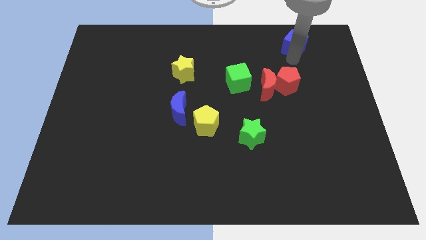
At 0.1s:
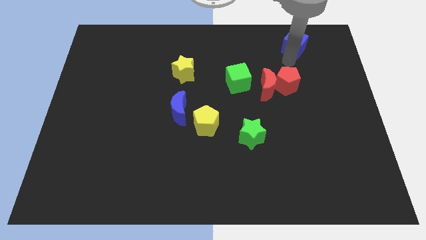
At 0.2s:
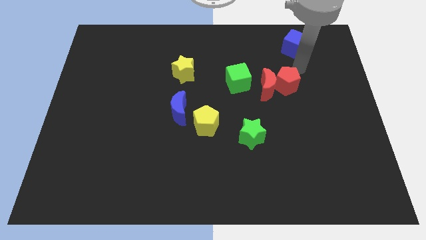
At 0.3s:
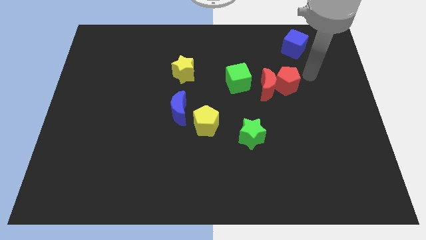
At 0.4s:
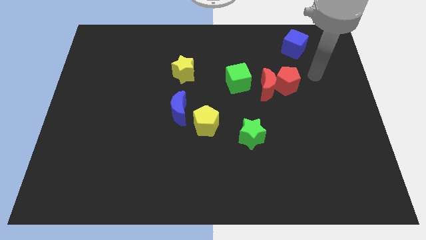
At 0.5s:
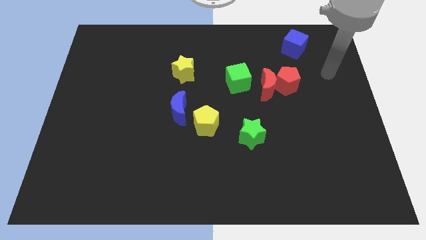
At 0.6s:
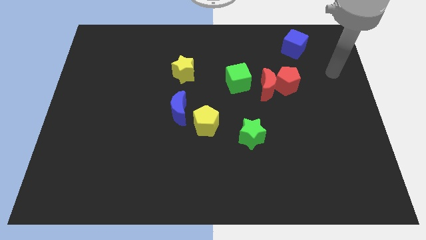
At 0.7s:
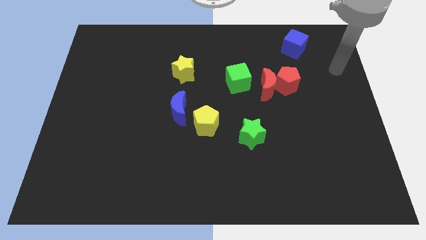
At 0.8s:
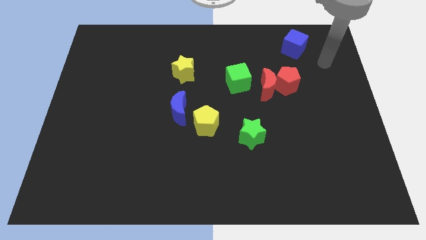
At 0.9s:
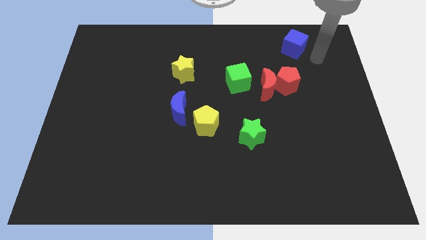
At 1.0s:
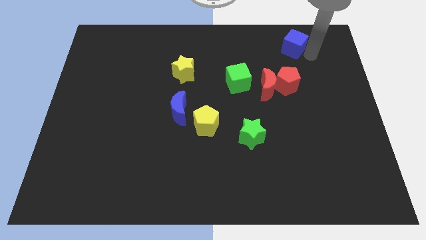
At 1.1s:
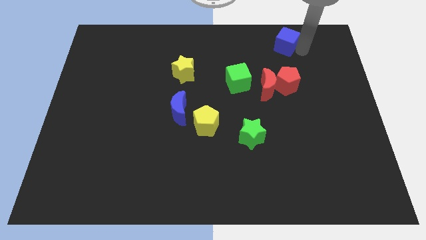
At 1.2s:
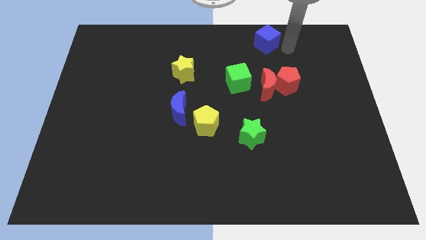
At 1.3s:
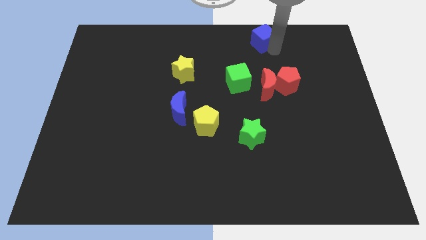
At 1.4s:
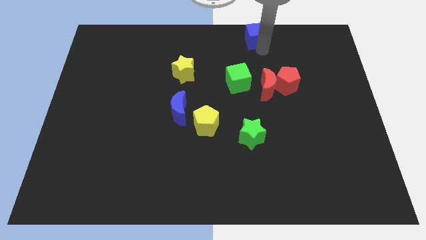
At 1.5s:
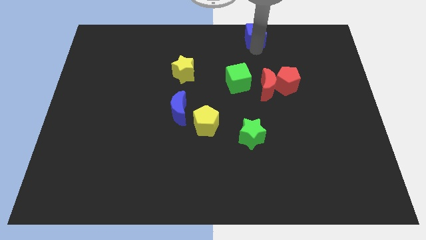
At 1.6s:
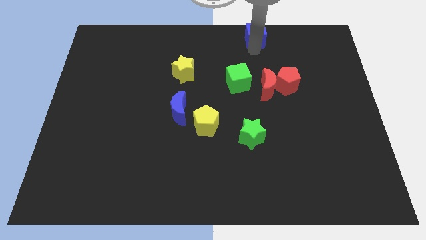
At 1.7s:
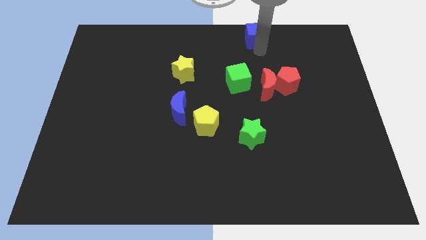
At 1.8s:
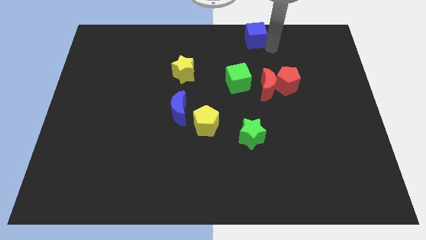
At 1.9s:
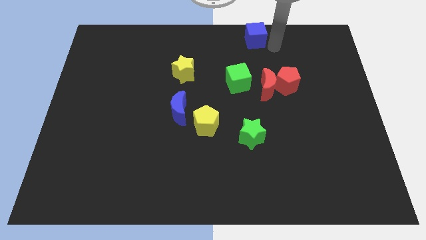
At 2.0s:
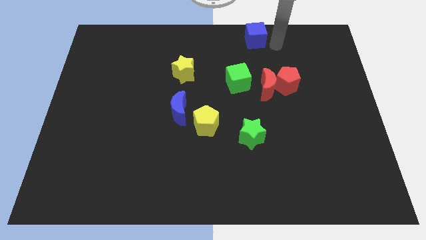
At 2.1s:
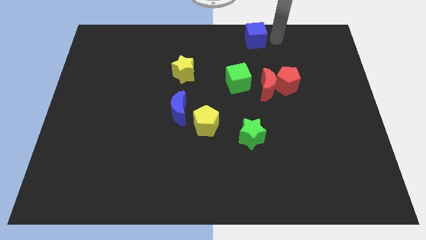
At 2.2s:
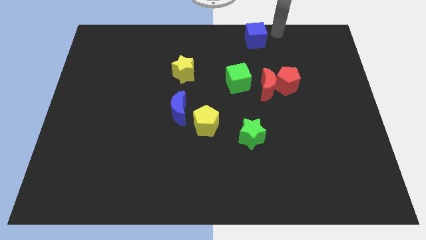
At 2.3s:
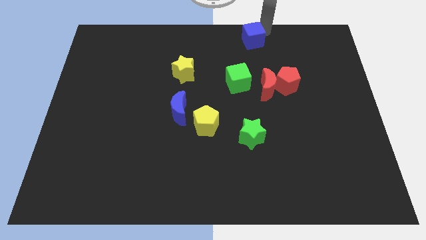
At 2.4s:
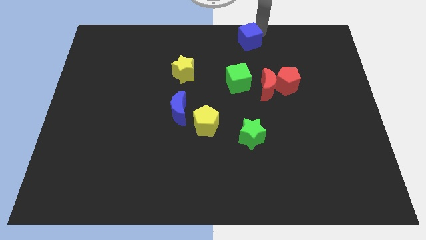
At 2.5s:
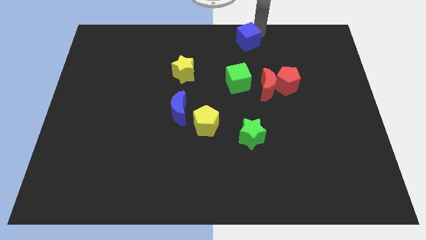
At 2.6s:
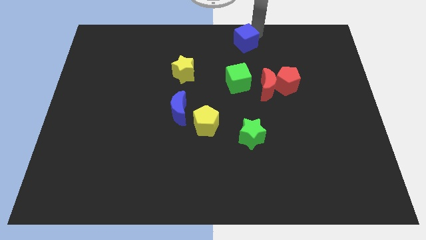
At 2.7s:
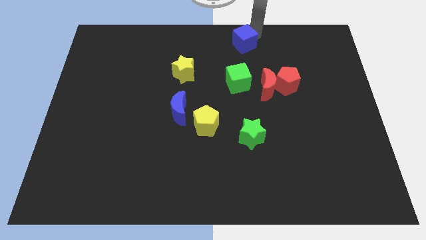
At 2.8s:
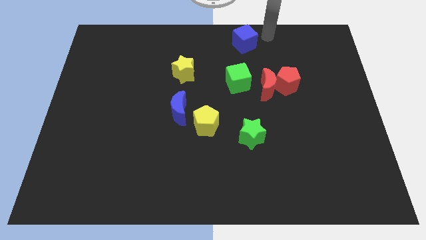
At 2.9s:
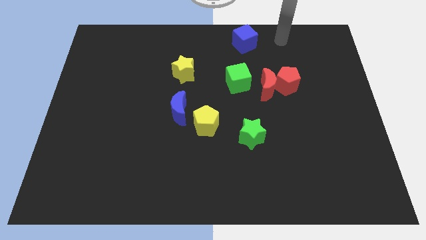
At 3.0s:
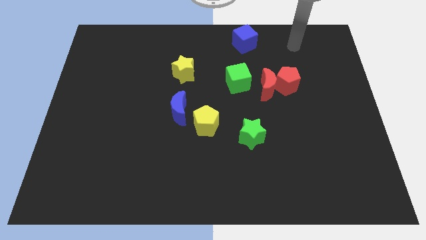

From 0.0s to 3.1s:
put the blue cube at the top side of the green cube

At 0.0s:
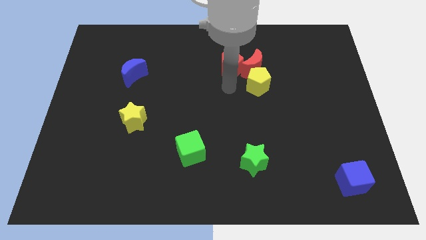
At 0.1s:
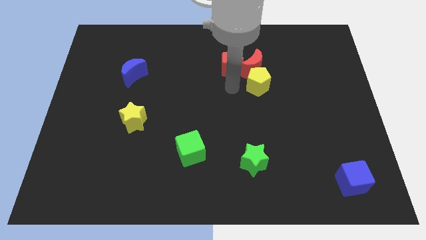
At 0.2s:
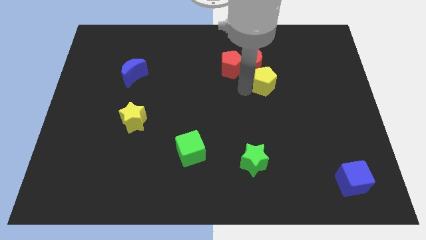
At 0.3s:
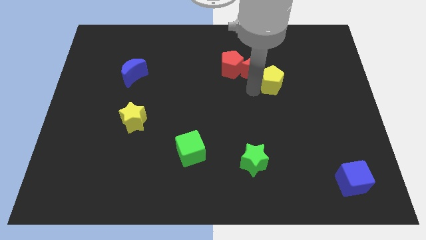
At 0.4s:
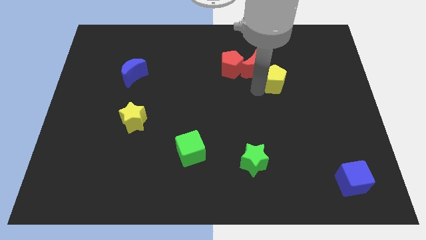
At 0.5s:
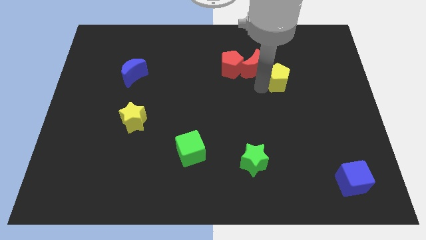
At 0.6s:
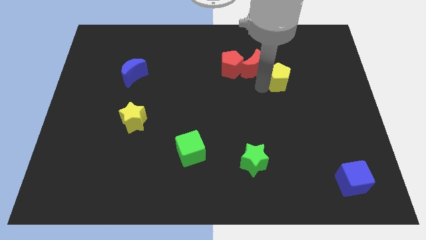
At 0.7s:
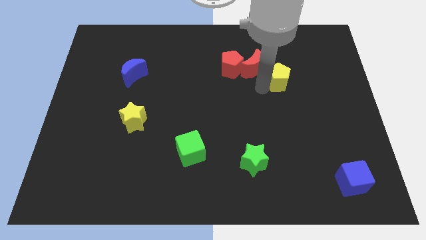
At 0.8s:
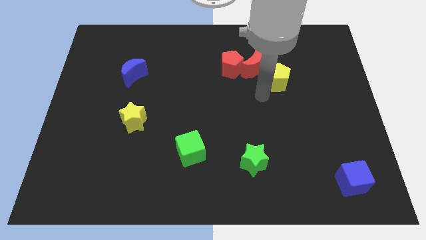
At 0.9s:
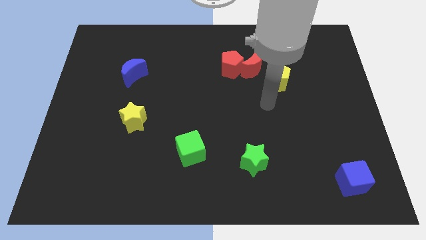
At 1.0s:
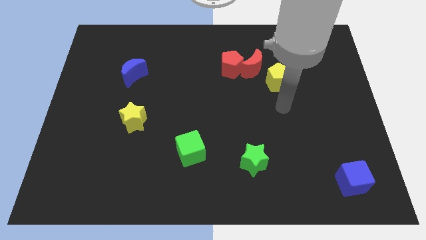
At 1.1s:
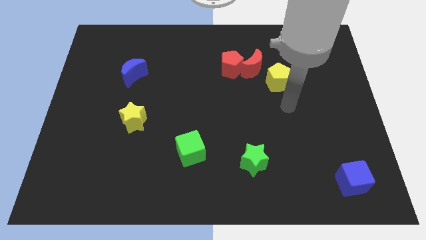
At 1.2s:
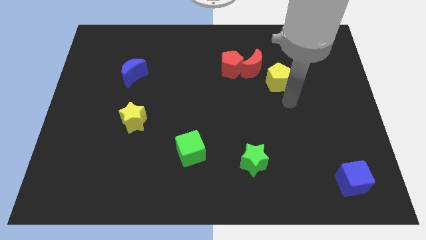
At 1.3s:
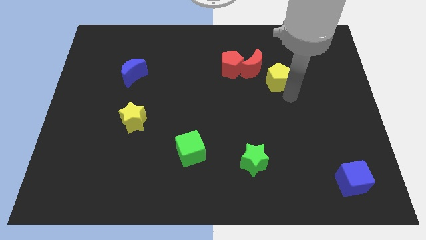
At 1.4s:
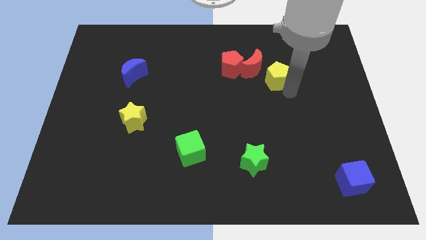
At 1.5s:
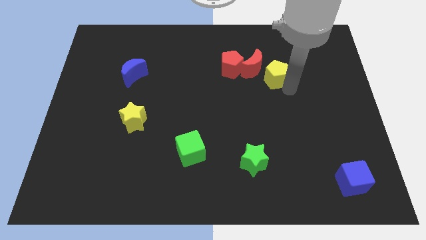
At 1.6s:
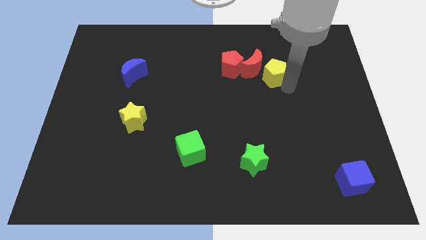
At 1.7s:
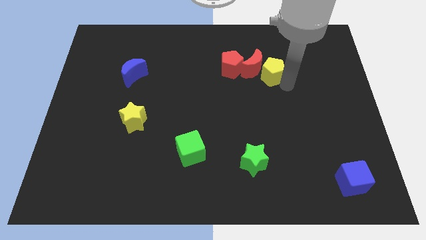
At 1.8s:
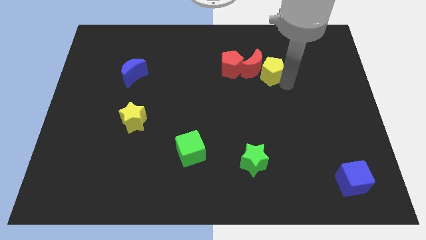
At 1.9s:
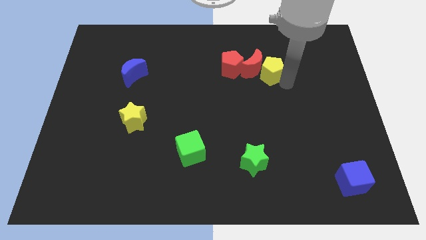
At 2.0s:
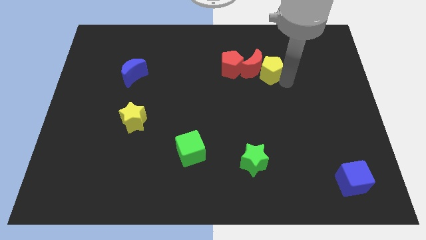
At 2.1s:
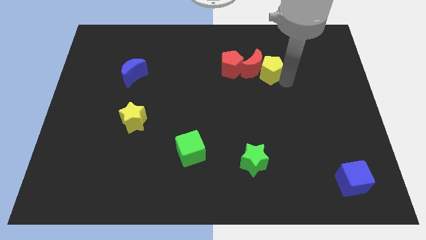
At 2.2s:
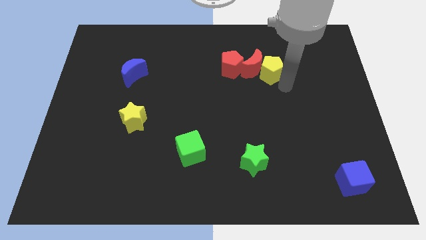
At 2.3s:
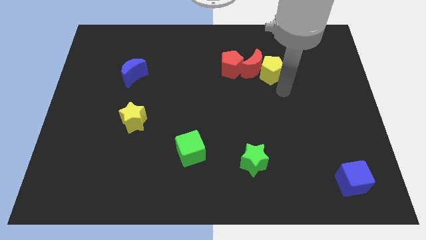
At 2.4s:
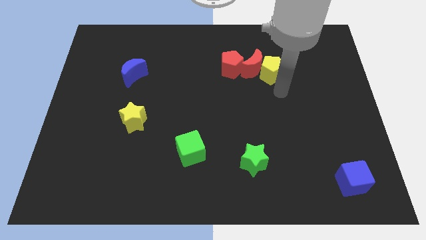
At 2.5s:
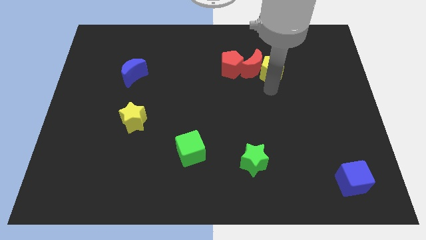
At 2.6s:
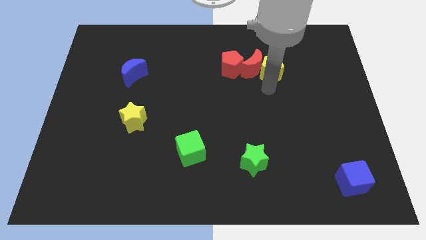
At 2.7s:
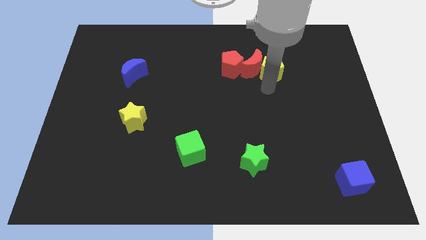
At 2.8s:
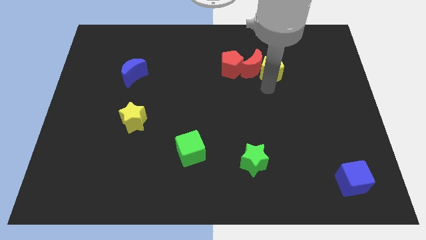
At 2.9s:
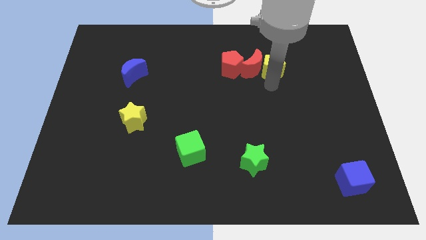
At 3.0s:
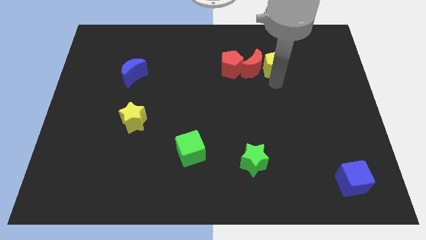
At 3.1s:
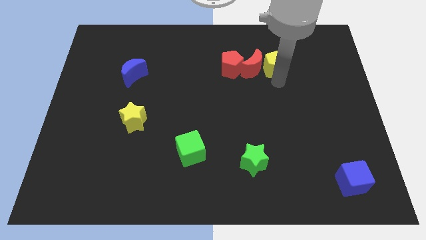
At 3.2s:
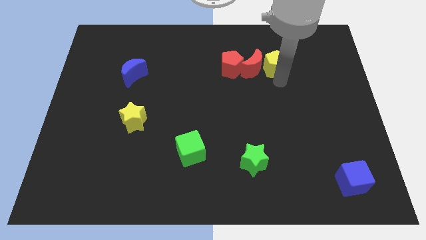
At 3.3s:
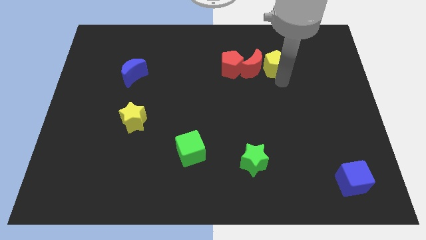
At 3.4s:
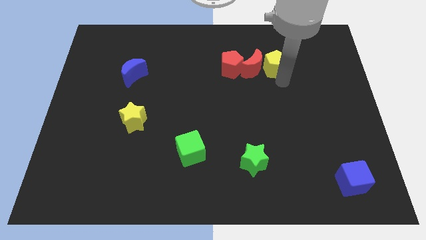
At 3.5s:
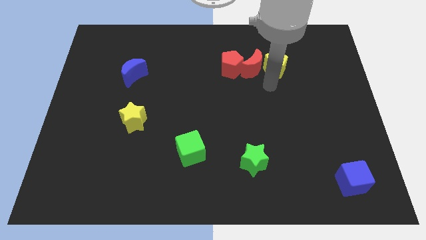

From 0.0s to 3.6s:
make a horizontal line with the yellow pentagon and red blocks

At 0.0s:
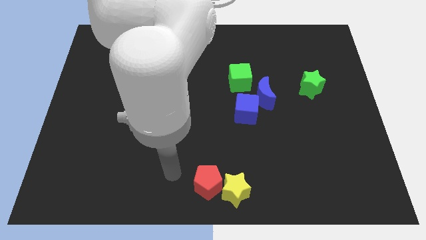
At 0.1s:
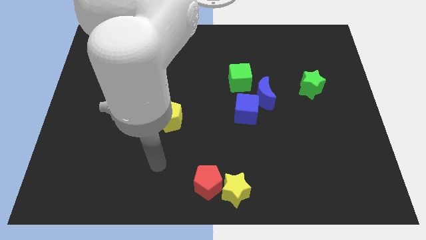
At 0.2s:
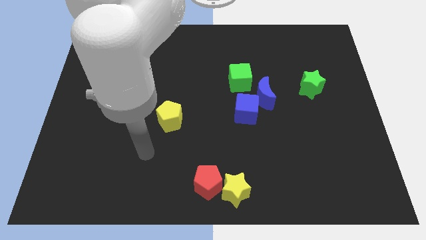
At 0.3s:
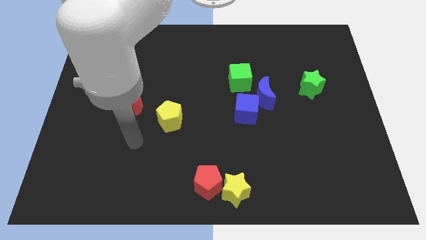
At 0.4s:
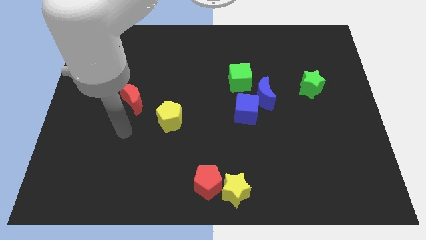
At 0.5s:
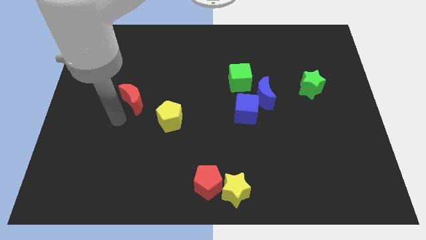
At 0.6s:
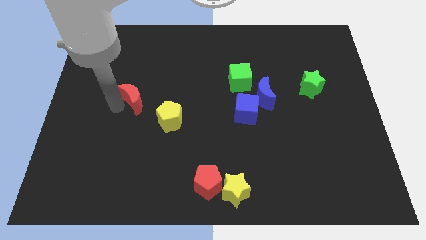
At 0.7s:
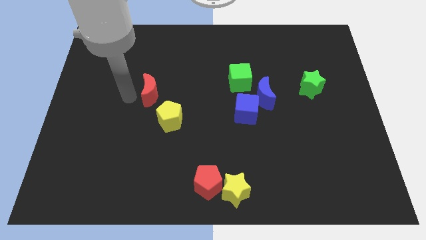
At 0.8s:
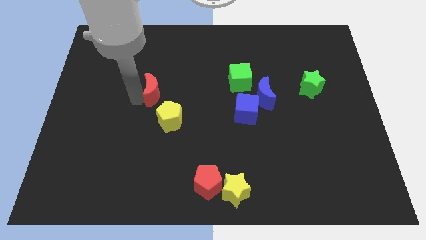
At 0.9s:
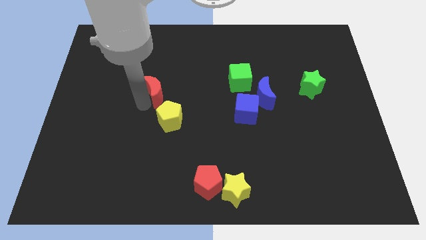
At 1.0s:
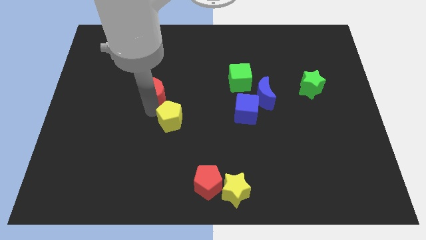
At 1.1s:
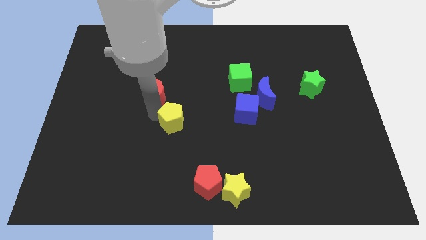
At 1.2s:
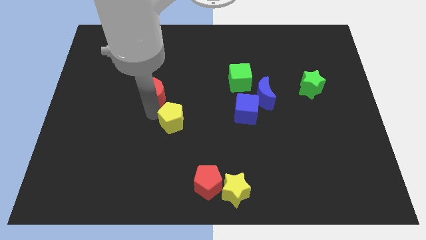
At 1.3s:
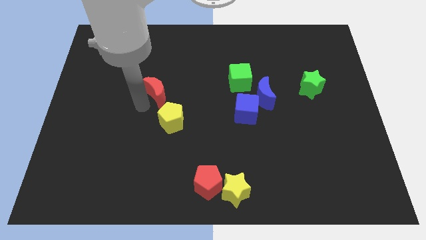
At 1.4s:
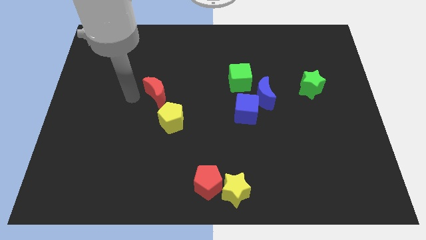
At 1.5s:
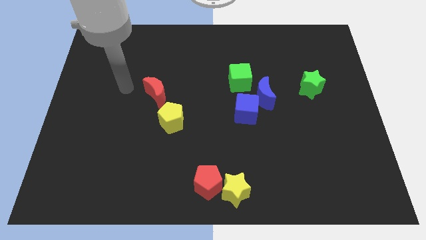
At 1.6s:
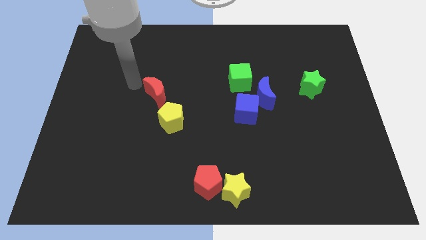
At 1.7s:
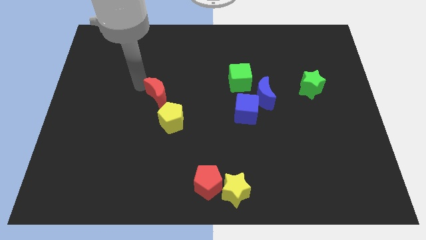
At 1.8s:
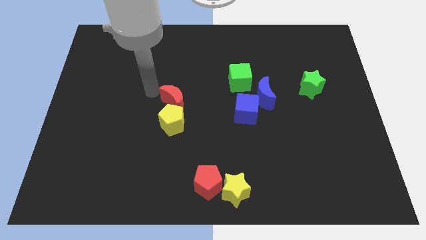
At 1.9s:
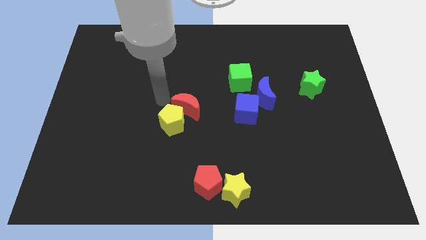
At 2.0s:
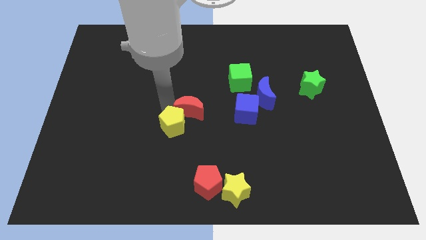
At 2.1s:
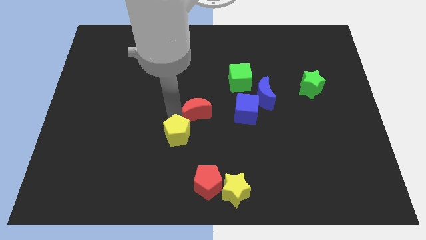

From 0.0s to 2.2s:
move the yellow pentagon into the red crescent
